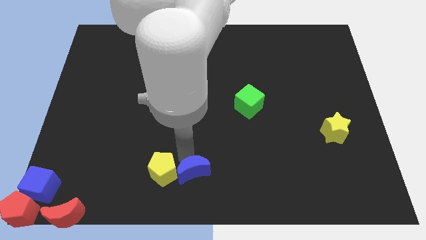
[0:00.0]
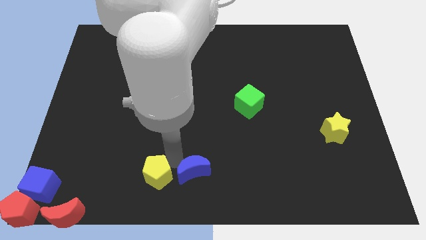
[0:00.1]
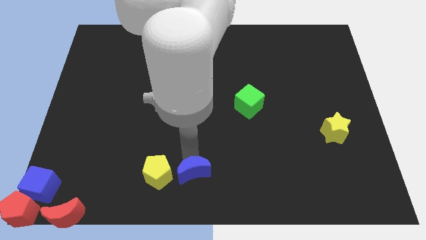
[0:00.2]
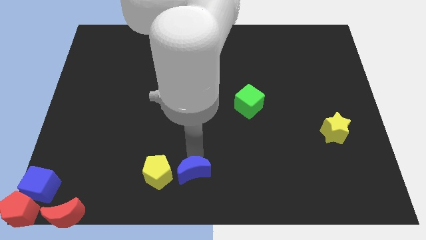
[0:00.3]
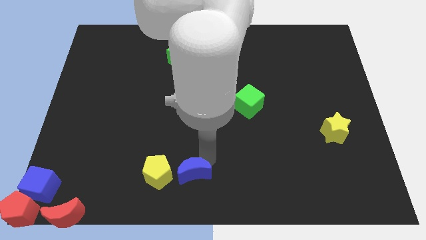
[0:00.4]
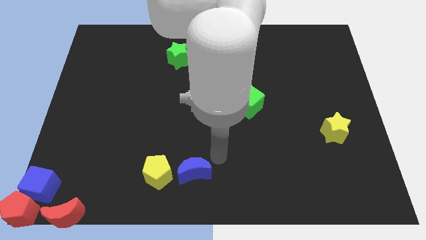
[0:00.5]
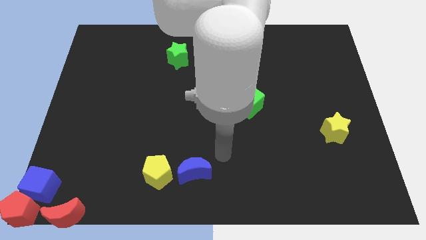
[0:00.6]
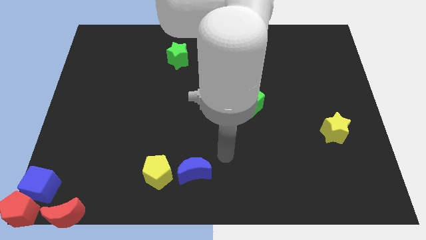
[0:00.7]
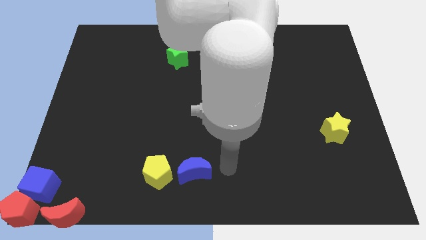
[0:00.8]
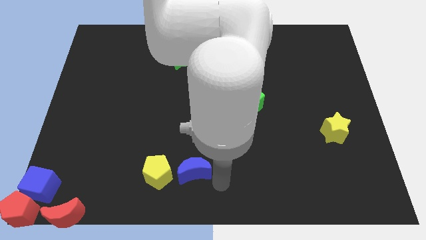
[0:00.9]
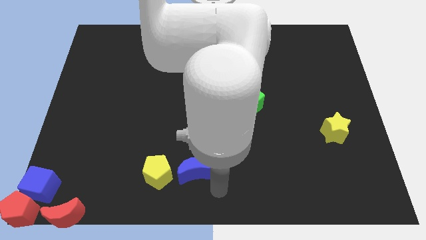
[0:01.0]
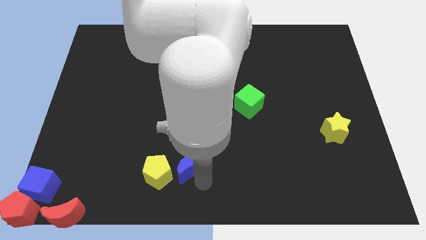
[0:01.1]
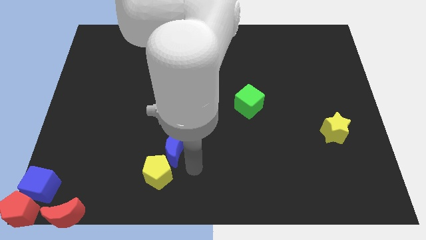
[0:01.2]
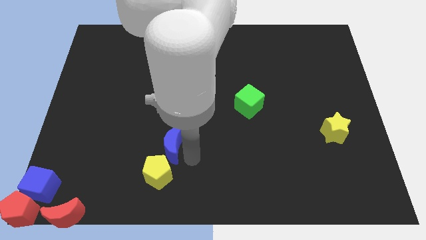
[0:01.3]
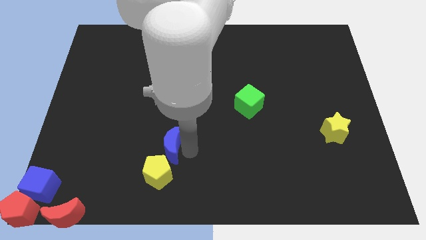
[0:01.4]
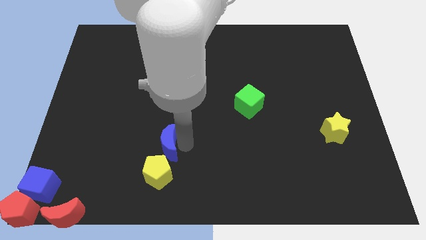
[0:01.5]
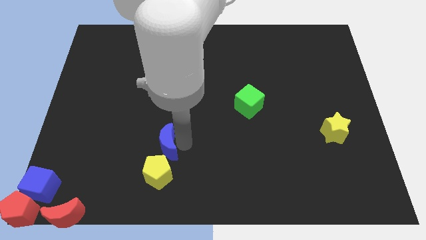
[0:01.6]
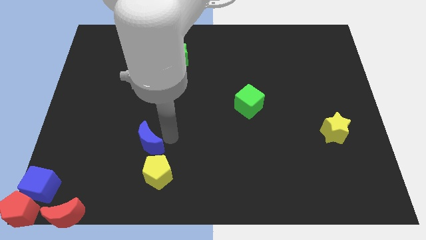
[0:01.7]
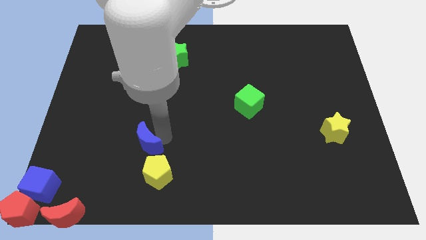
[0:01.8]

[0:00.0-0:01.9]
push blue crescent to the top of yellow pentagon

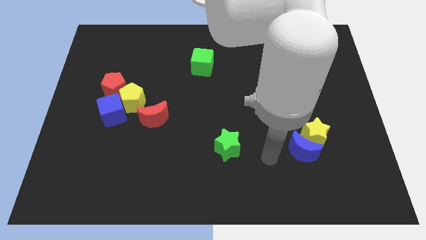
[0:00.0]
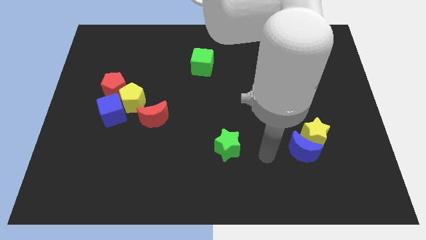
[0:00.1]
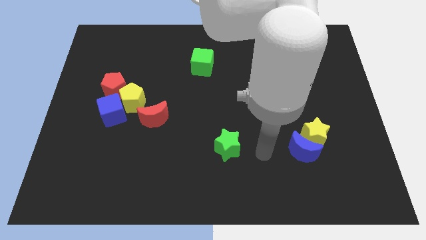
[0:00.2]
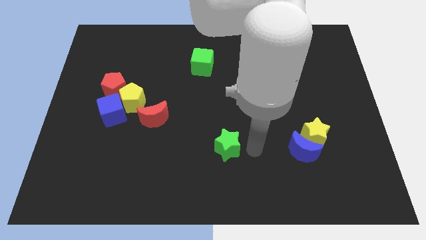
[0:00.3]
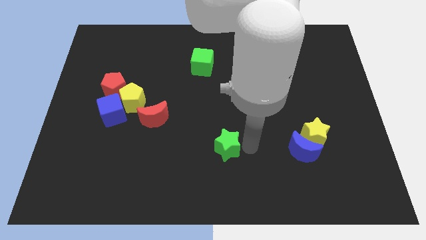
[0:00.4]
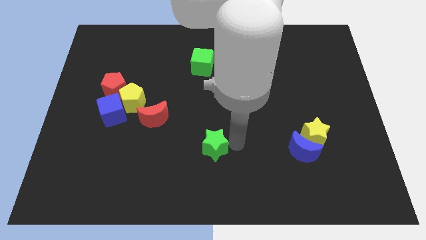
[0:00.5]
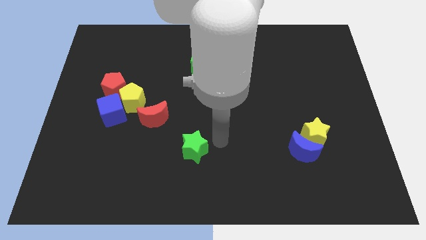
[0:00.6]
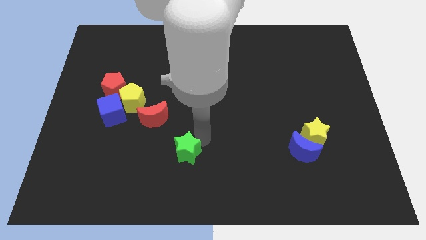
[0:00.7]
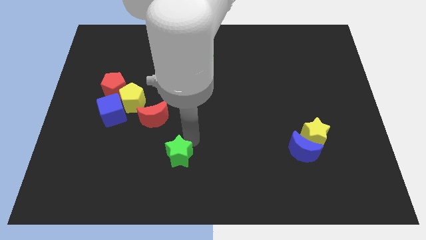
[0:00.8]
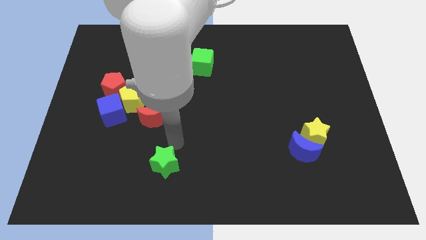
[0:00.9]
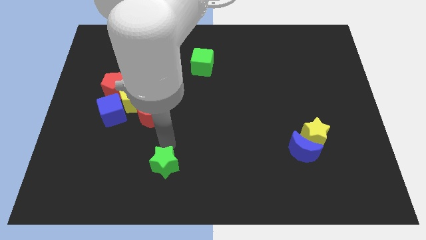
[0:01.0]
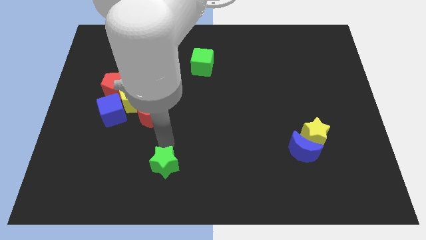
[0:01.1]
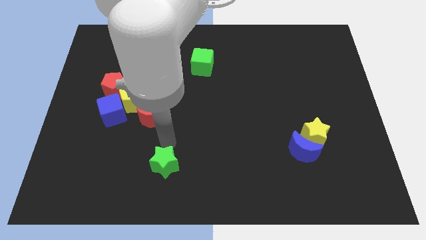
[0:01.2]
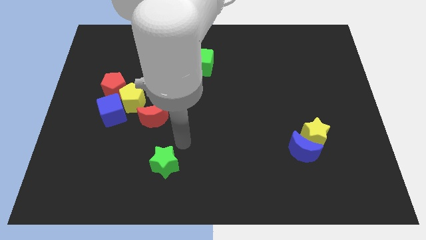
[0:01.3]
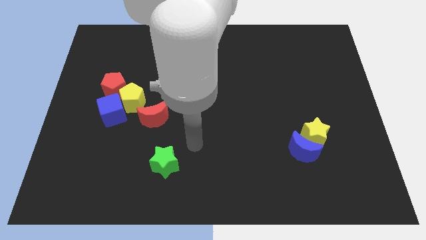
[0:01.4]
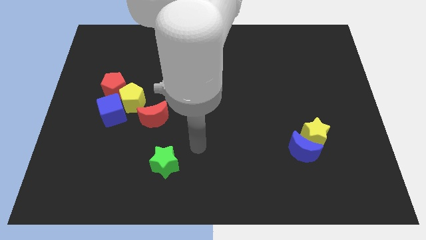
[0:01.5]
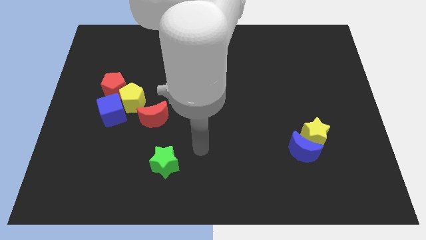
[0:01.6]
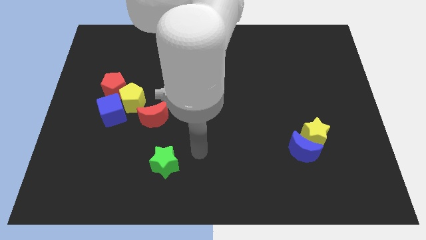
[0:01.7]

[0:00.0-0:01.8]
move the green star below the red moon

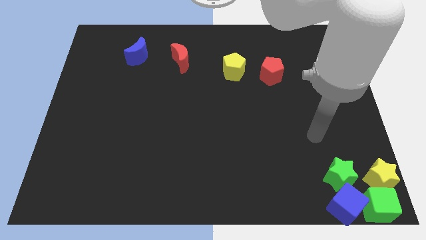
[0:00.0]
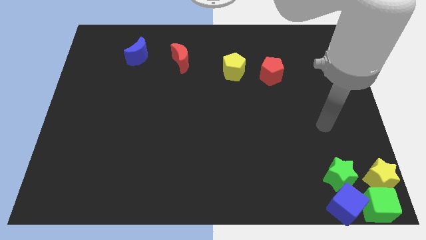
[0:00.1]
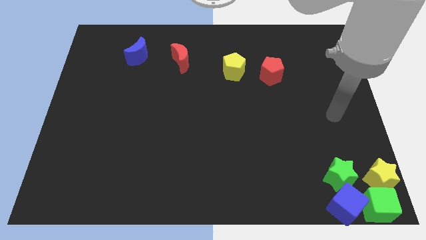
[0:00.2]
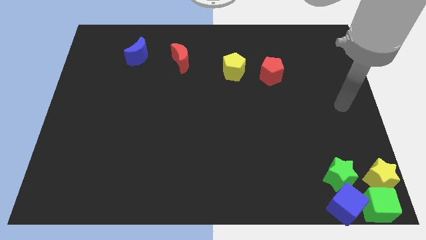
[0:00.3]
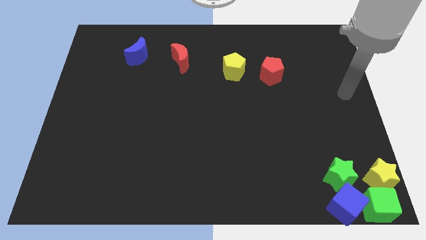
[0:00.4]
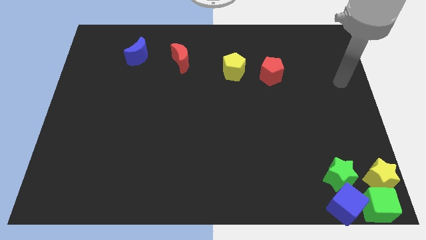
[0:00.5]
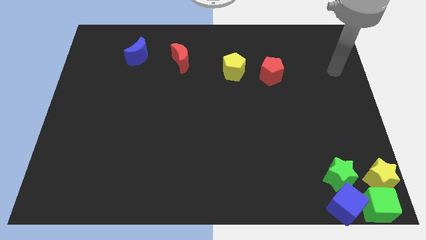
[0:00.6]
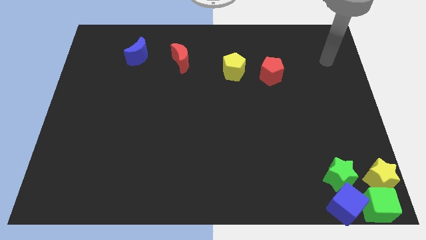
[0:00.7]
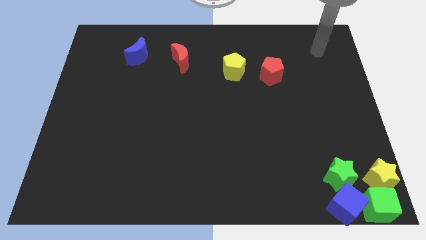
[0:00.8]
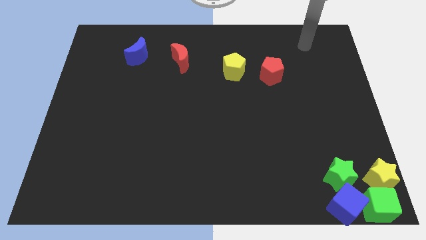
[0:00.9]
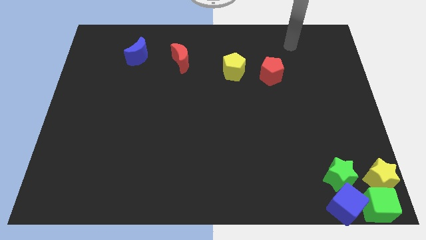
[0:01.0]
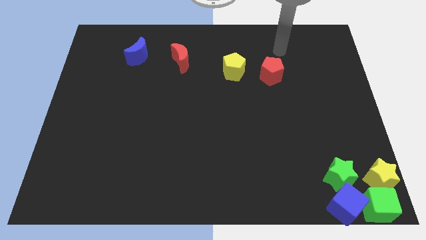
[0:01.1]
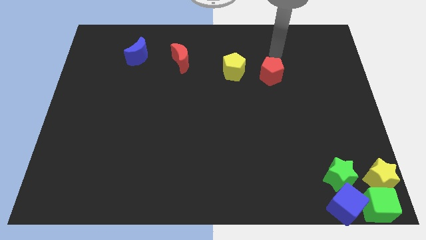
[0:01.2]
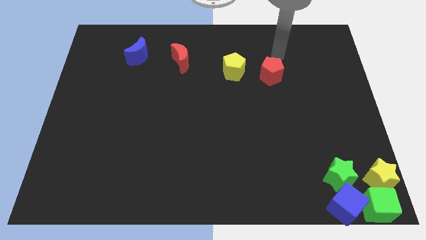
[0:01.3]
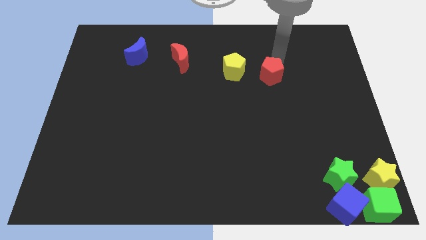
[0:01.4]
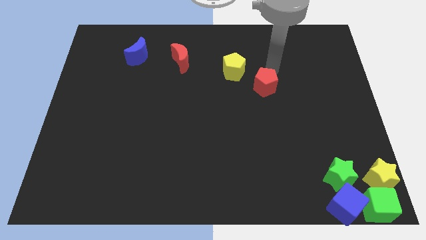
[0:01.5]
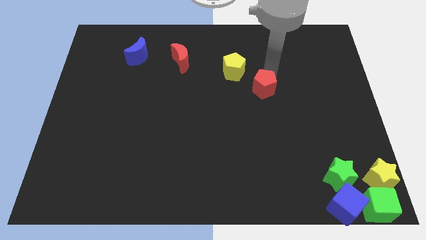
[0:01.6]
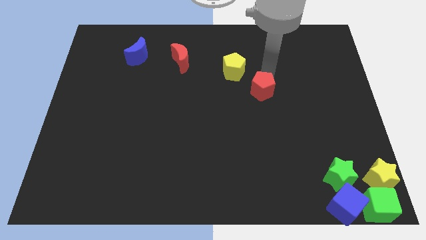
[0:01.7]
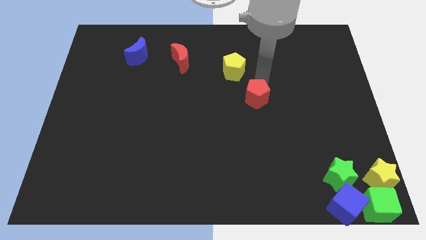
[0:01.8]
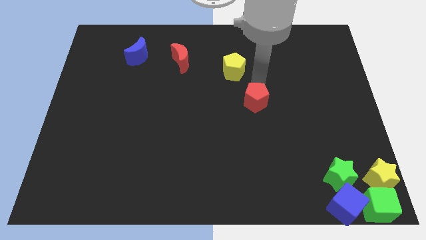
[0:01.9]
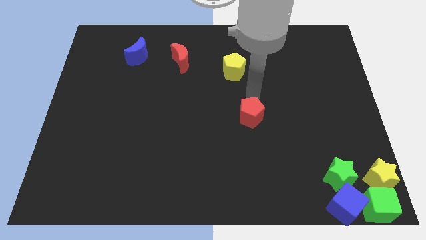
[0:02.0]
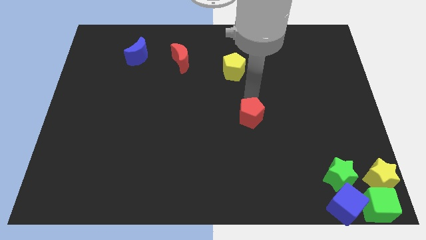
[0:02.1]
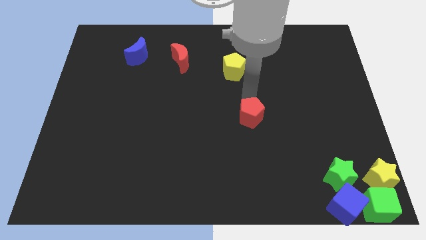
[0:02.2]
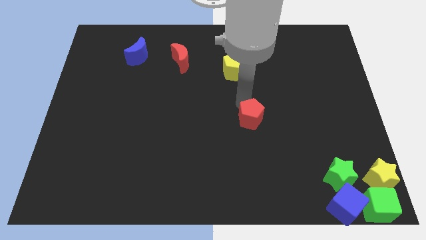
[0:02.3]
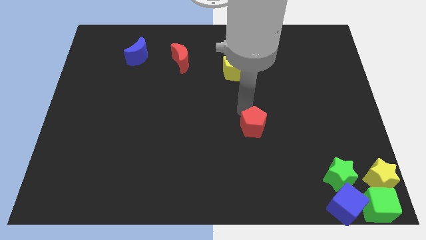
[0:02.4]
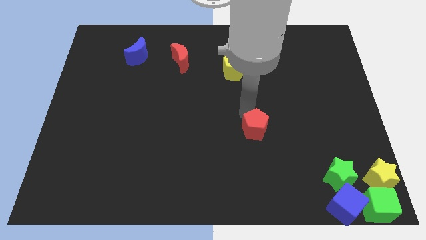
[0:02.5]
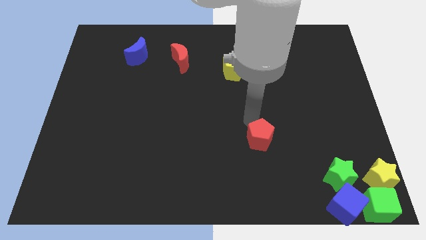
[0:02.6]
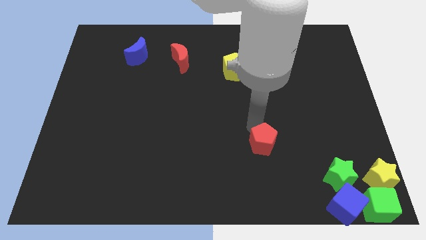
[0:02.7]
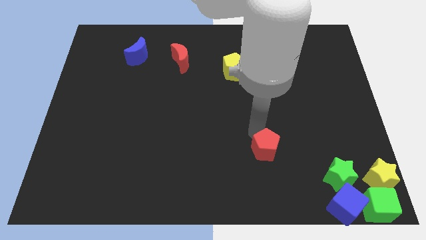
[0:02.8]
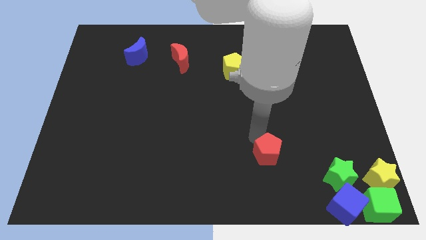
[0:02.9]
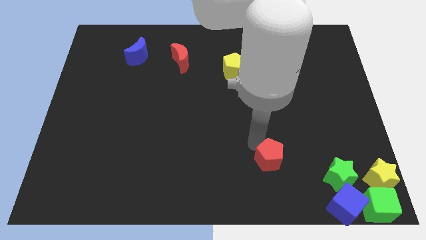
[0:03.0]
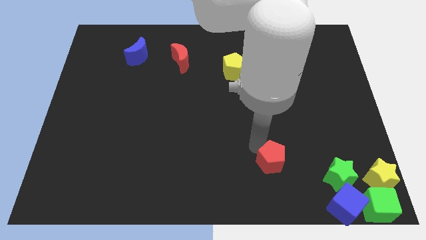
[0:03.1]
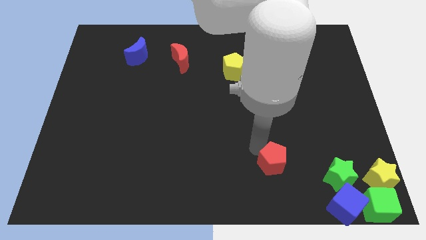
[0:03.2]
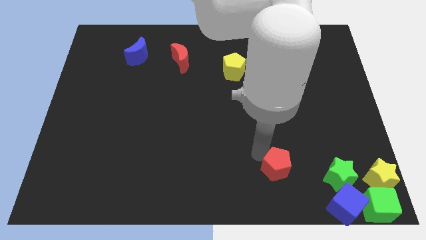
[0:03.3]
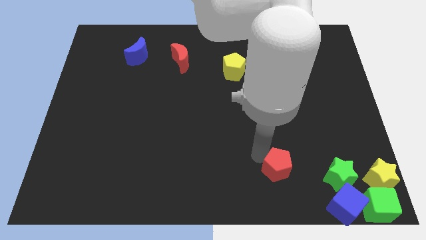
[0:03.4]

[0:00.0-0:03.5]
slide the red pentagon towards the group of blocks at the bottom right of the table

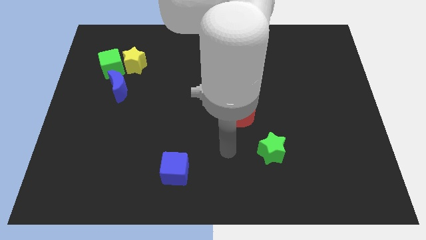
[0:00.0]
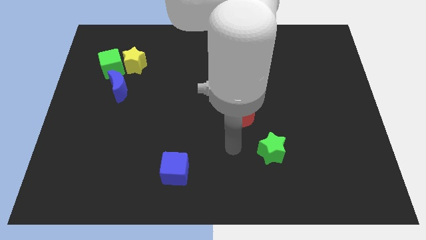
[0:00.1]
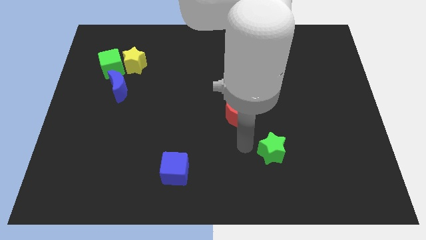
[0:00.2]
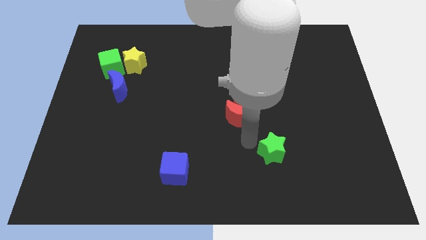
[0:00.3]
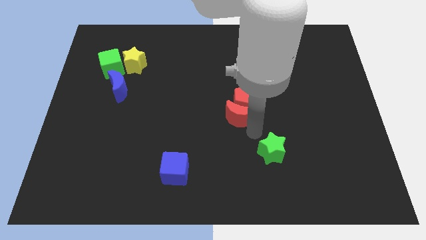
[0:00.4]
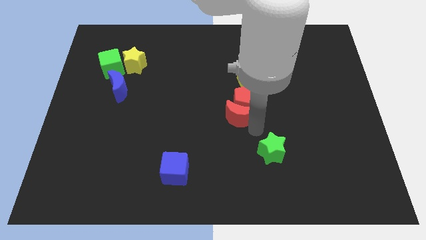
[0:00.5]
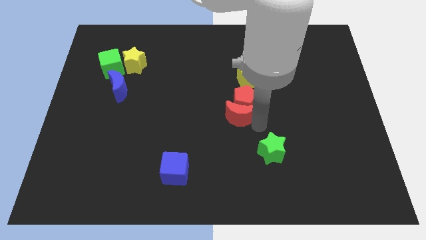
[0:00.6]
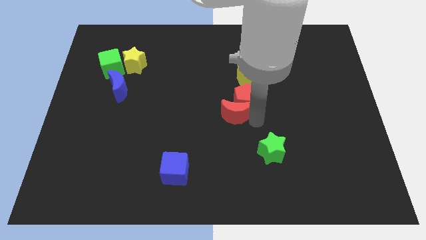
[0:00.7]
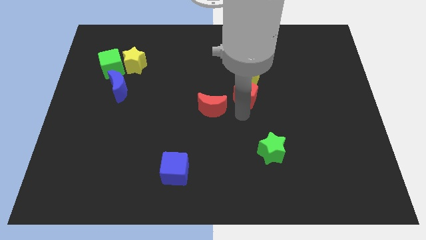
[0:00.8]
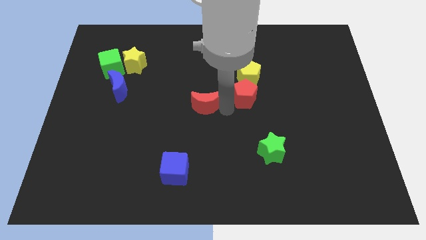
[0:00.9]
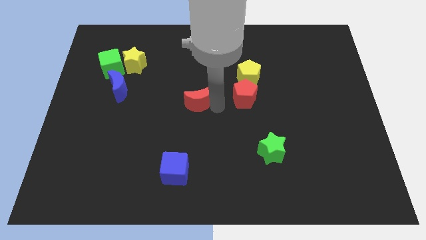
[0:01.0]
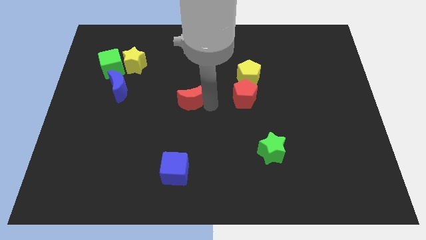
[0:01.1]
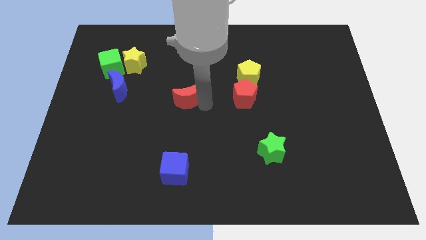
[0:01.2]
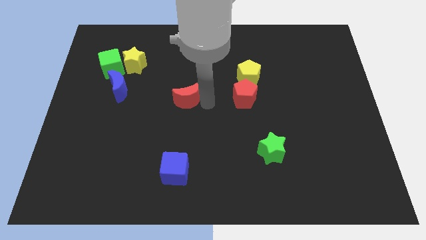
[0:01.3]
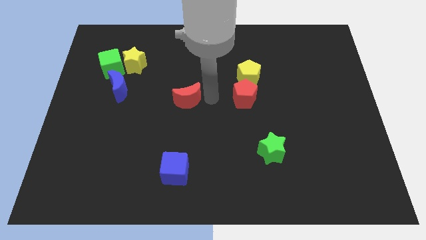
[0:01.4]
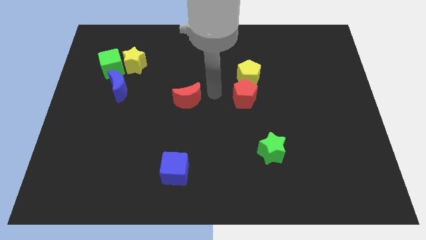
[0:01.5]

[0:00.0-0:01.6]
put the red crescent parallel to the red pentagon

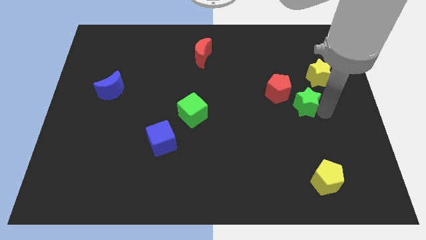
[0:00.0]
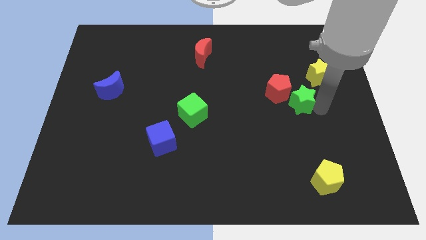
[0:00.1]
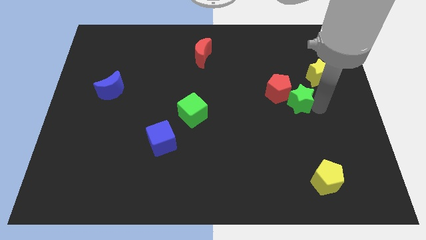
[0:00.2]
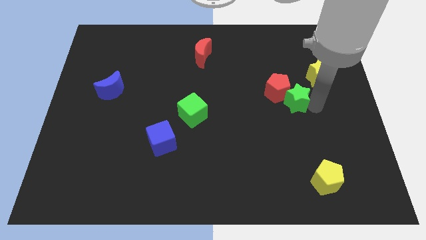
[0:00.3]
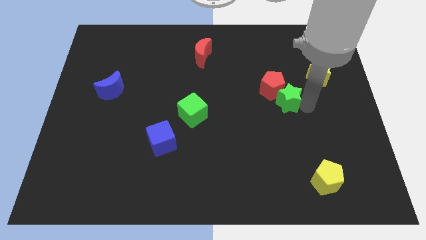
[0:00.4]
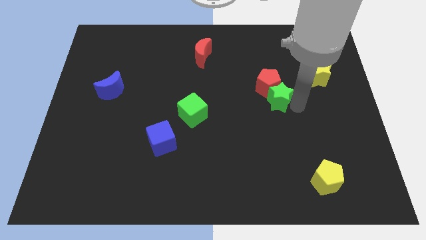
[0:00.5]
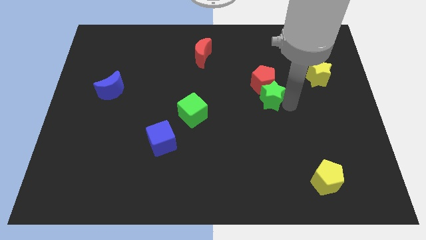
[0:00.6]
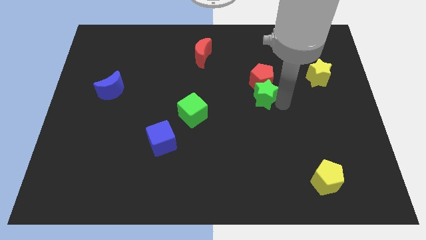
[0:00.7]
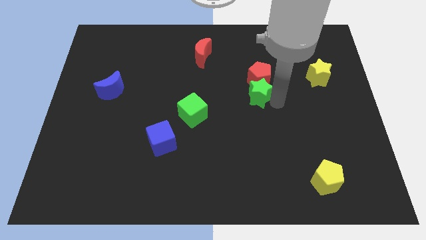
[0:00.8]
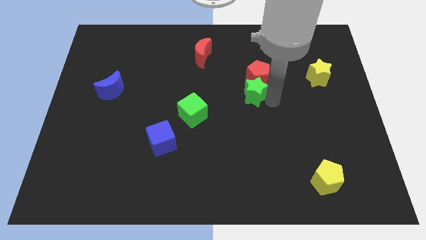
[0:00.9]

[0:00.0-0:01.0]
push the green star to the bottom of red pentagon
